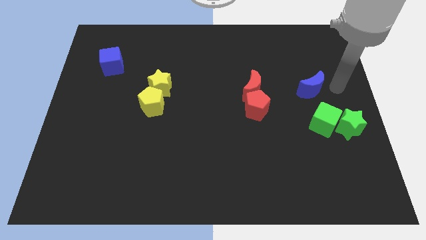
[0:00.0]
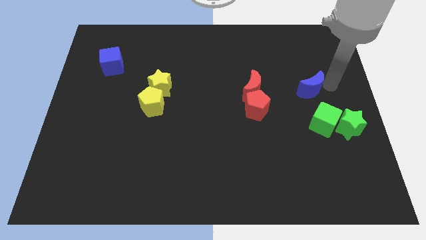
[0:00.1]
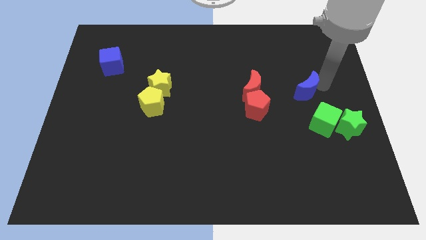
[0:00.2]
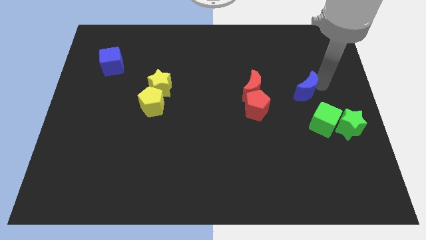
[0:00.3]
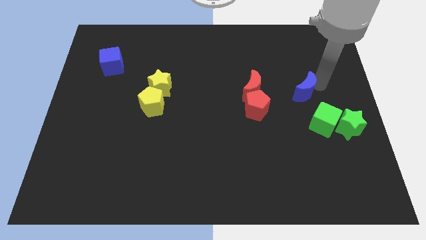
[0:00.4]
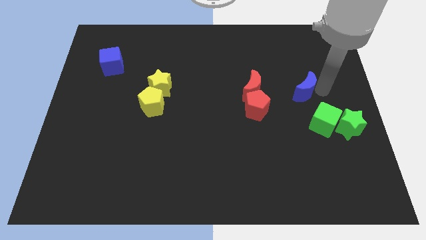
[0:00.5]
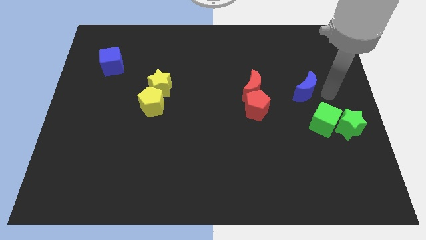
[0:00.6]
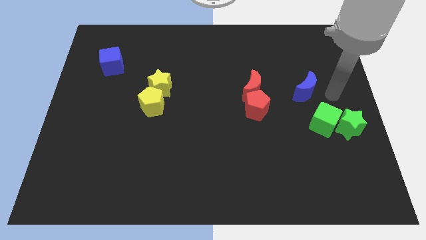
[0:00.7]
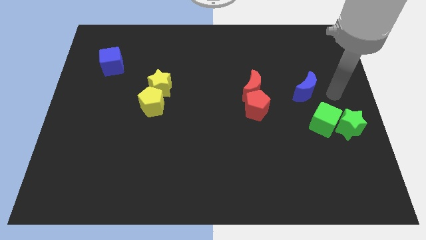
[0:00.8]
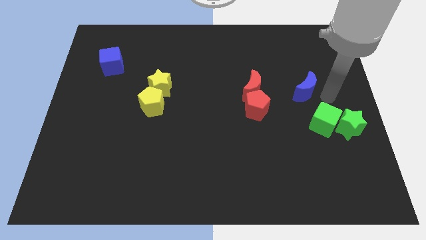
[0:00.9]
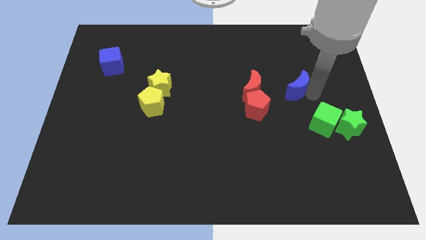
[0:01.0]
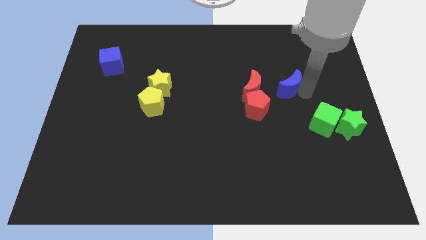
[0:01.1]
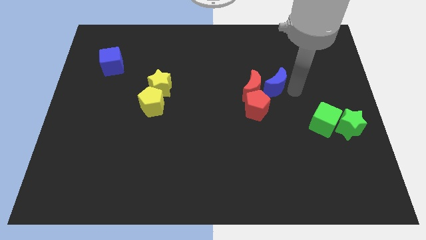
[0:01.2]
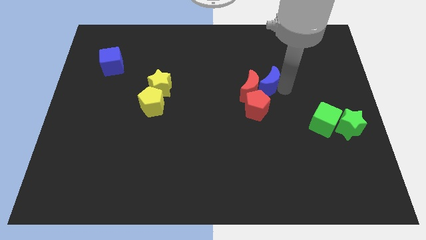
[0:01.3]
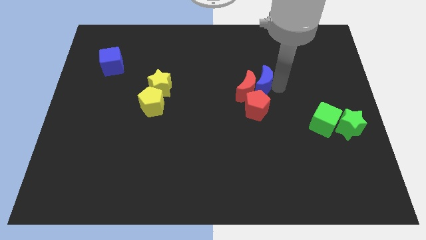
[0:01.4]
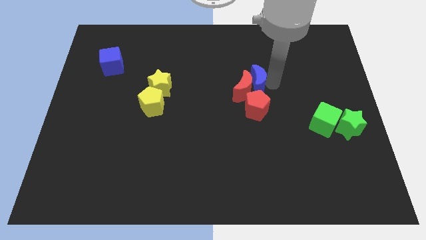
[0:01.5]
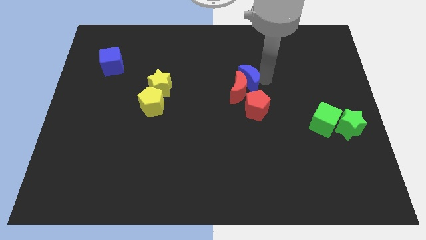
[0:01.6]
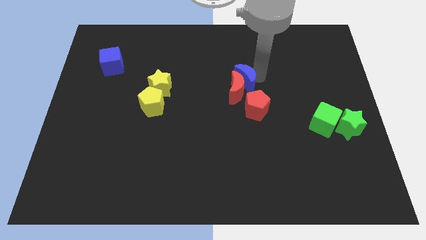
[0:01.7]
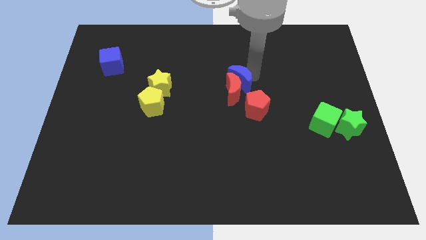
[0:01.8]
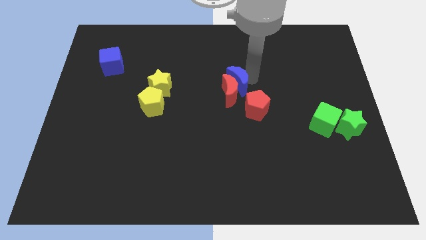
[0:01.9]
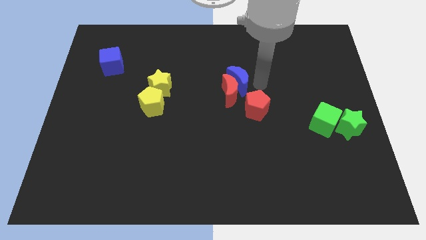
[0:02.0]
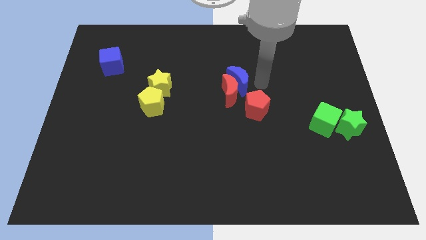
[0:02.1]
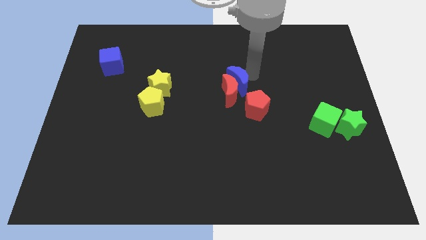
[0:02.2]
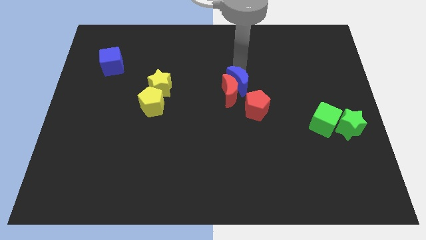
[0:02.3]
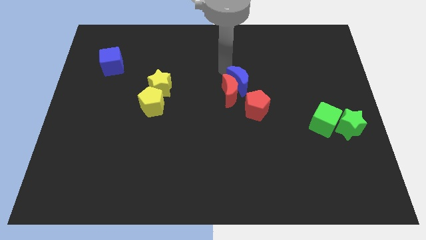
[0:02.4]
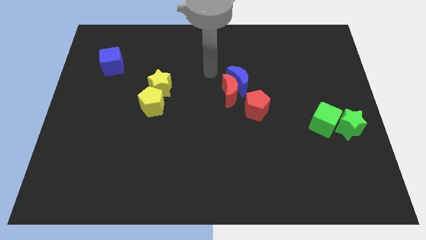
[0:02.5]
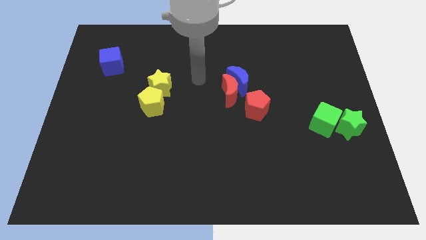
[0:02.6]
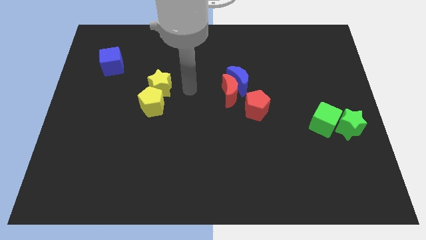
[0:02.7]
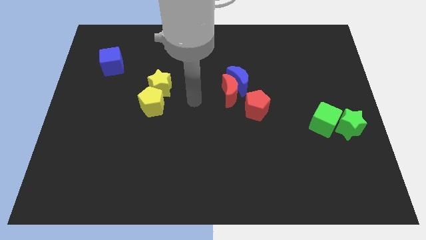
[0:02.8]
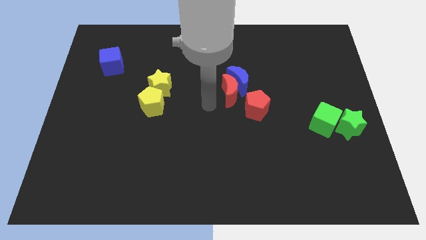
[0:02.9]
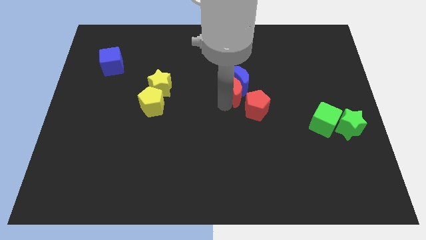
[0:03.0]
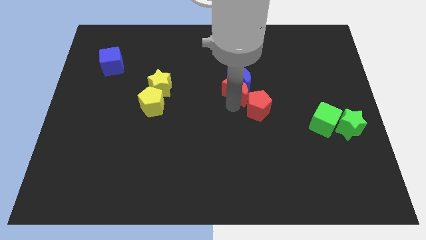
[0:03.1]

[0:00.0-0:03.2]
push the blue moon into the red crescent

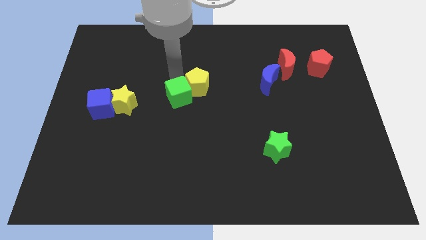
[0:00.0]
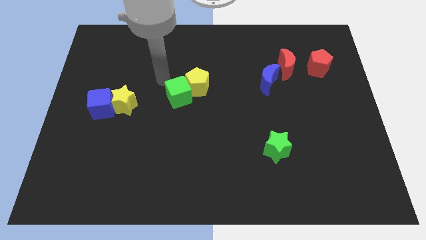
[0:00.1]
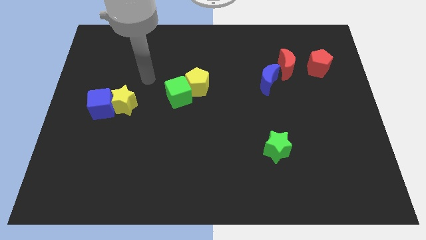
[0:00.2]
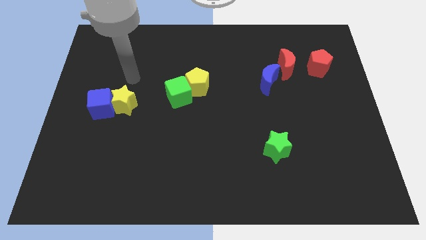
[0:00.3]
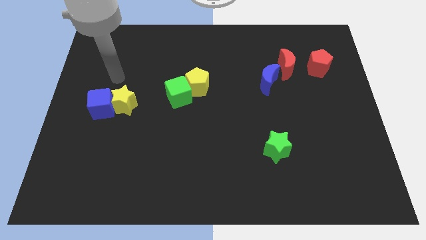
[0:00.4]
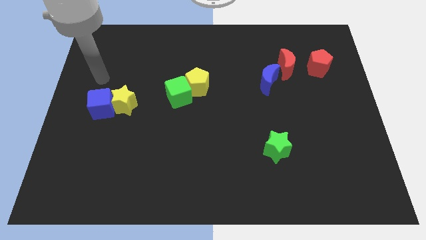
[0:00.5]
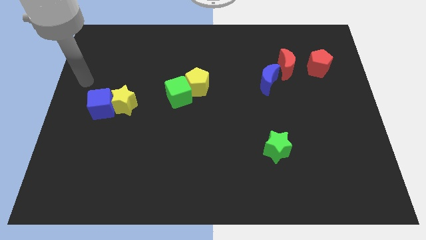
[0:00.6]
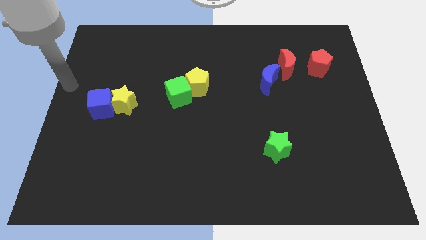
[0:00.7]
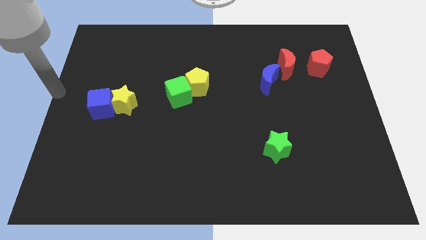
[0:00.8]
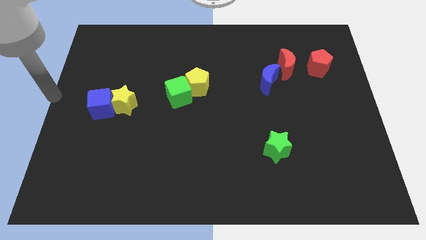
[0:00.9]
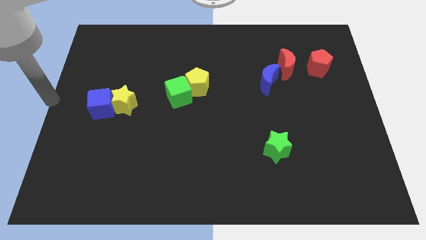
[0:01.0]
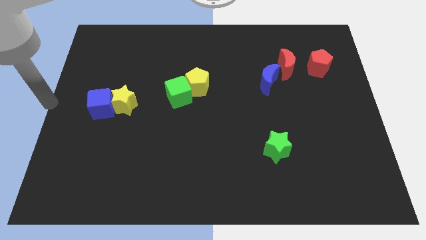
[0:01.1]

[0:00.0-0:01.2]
point your arm to the center left side of the board

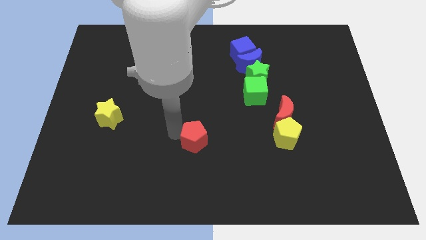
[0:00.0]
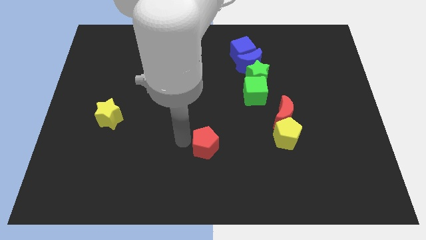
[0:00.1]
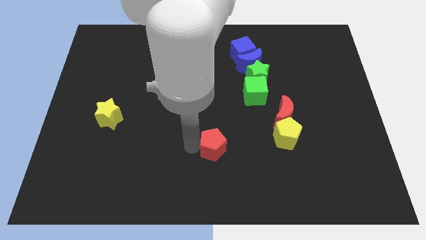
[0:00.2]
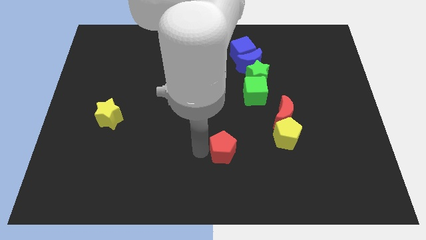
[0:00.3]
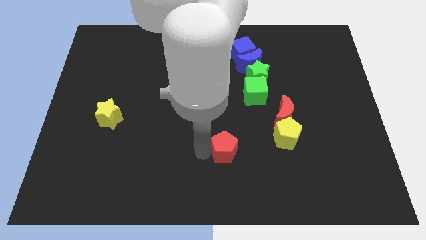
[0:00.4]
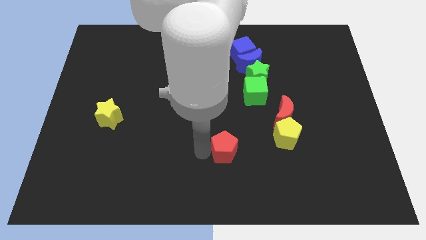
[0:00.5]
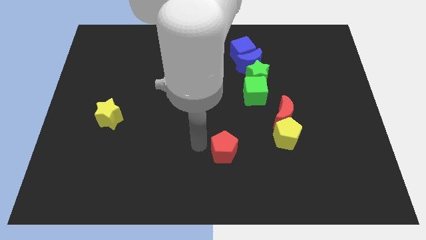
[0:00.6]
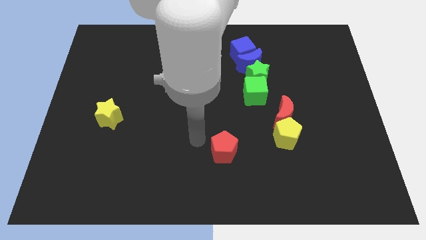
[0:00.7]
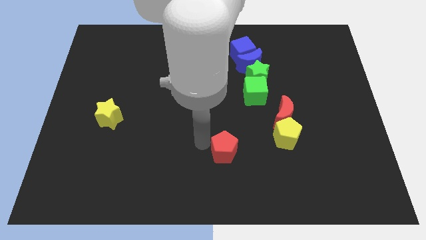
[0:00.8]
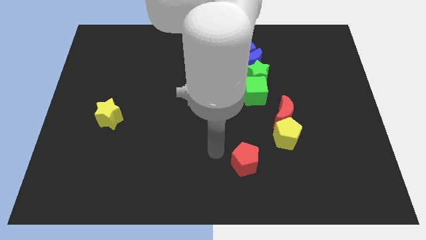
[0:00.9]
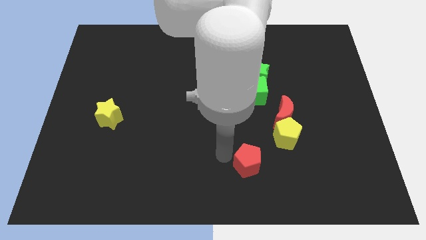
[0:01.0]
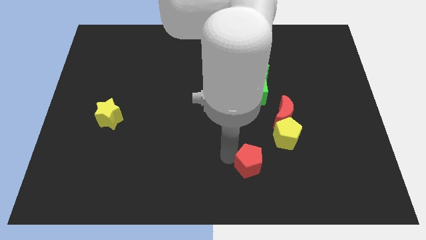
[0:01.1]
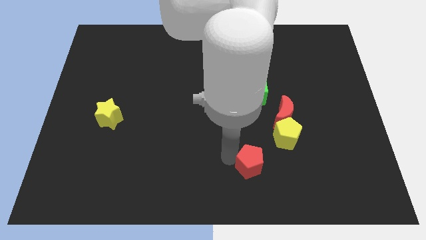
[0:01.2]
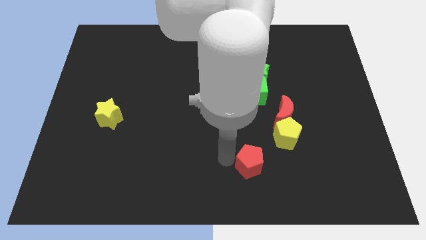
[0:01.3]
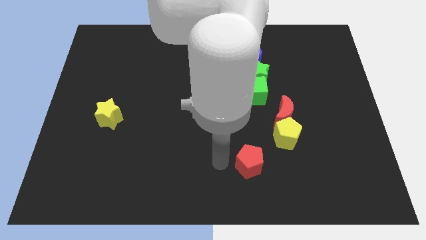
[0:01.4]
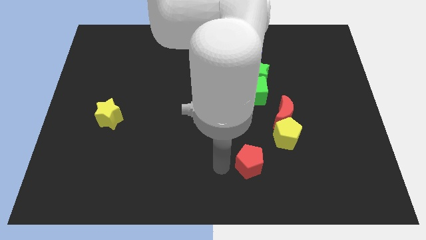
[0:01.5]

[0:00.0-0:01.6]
place the red pentagon diagonally bottom left to the yellow pentagon

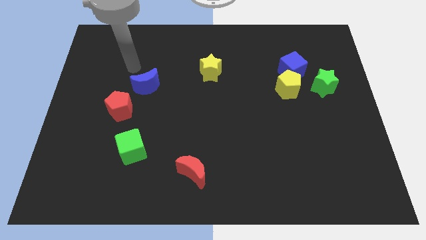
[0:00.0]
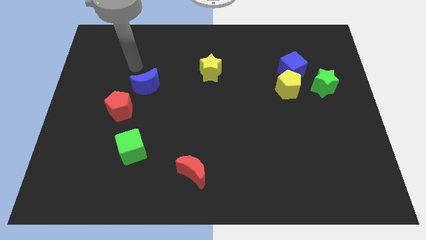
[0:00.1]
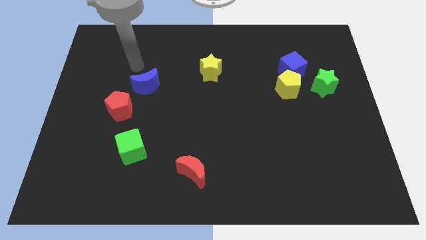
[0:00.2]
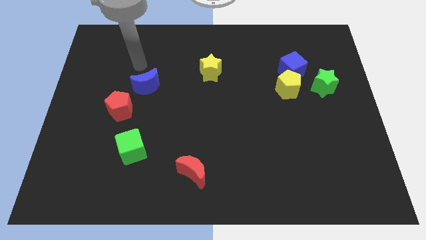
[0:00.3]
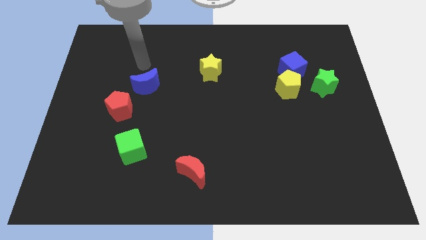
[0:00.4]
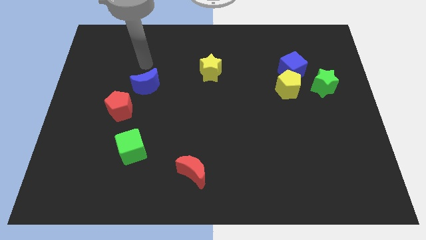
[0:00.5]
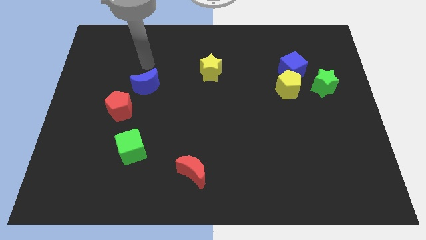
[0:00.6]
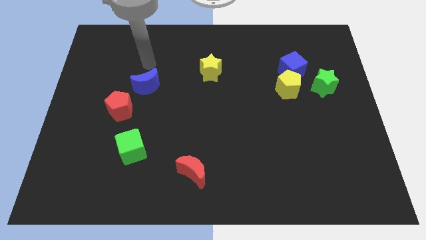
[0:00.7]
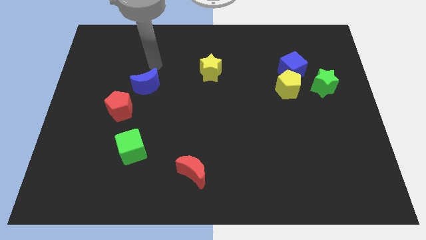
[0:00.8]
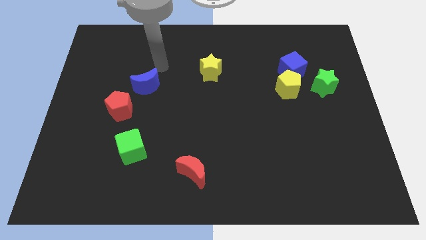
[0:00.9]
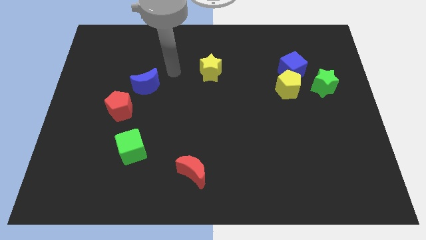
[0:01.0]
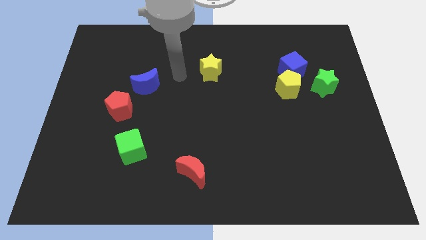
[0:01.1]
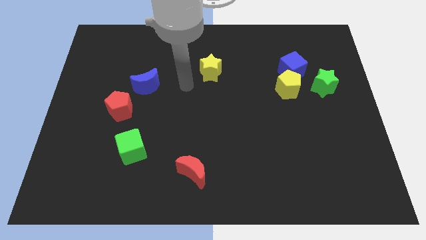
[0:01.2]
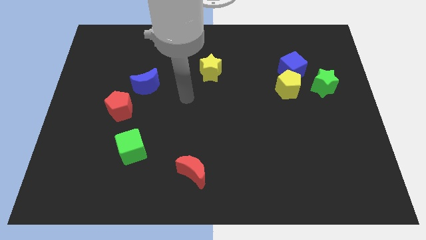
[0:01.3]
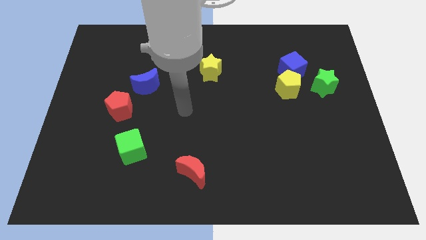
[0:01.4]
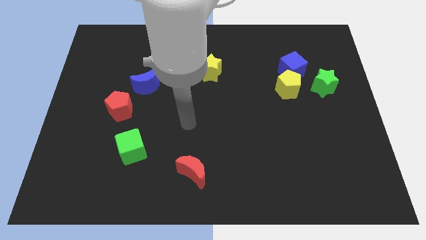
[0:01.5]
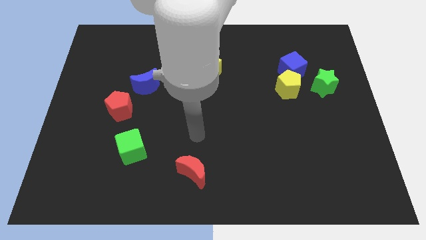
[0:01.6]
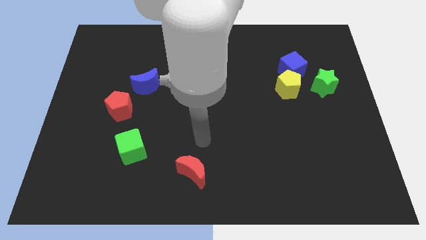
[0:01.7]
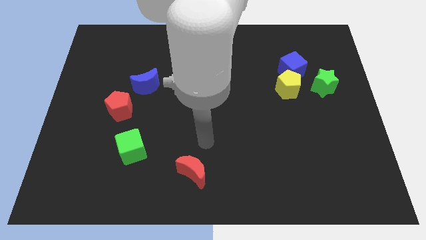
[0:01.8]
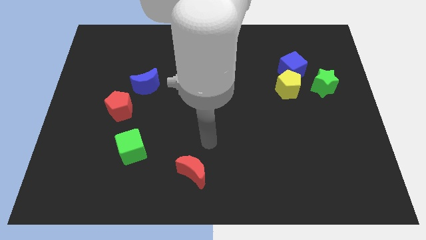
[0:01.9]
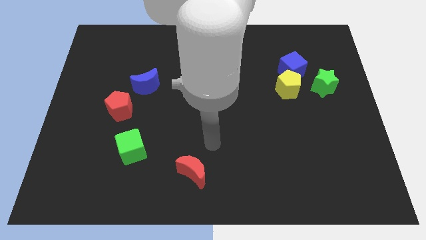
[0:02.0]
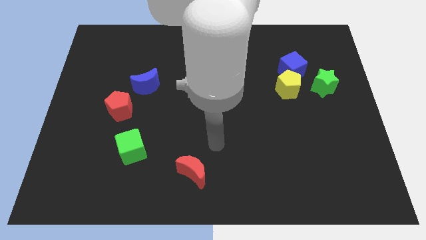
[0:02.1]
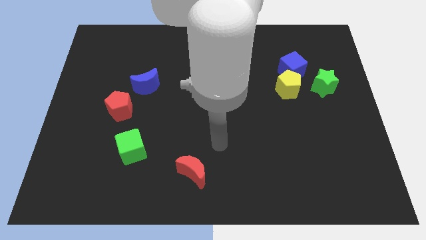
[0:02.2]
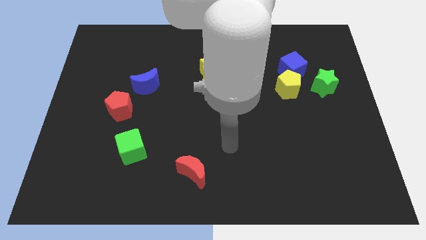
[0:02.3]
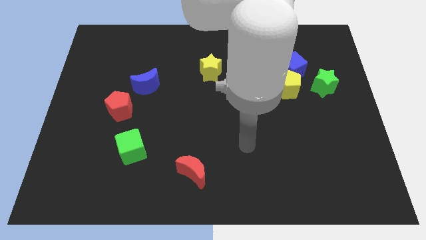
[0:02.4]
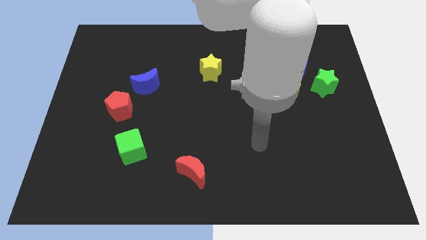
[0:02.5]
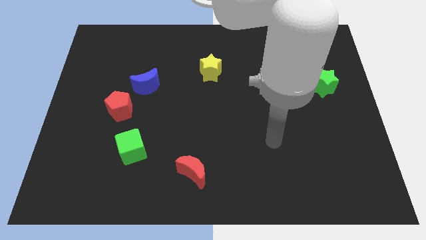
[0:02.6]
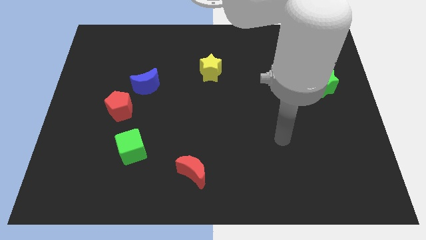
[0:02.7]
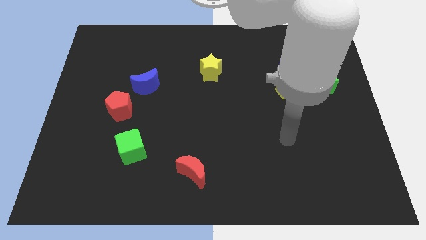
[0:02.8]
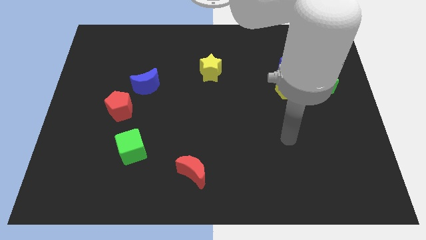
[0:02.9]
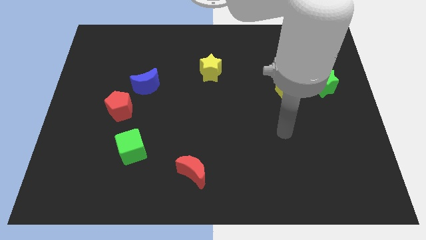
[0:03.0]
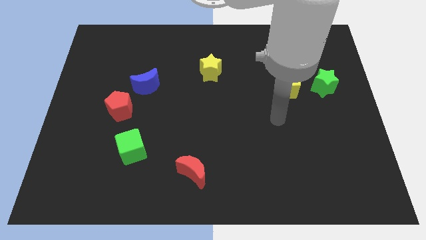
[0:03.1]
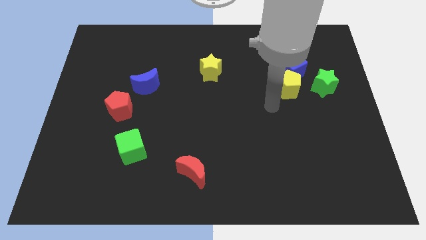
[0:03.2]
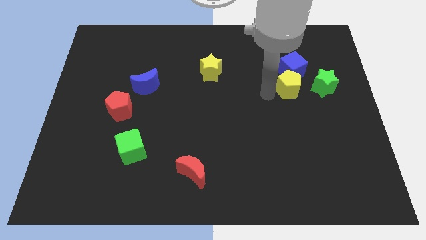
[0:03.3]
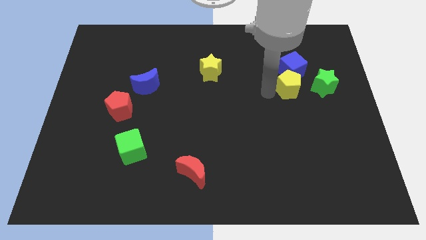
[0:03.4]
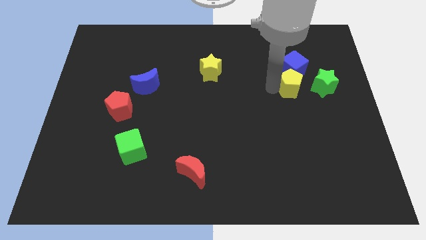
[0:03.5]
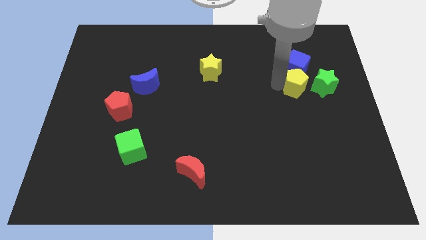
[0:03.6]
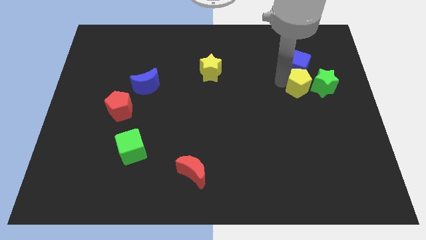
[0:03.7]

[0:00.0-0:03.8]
move the arm to the left side of the yellow pentagon
